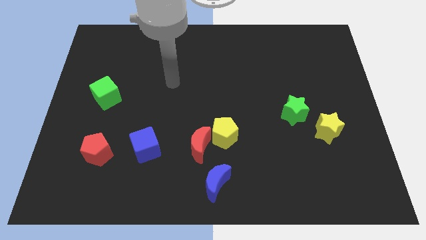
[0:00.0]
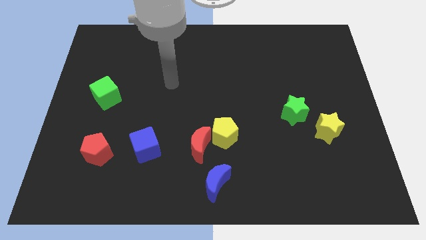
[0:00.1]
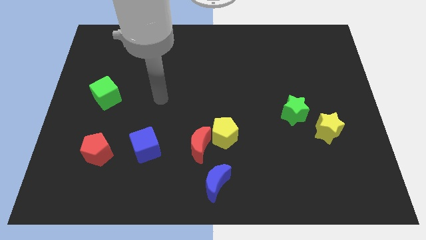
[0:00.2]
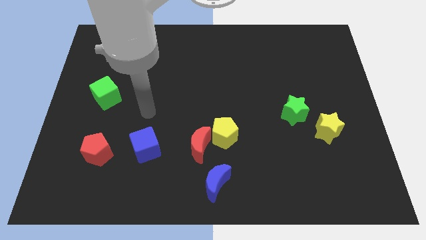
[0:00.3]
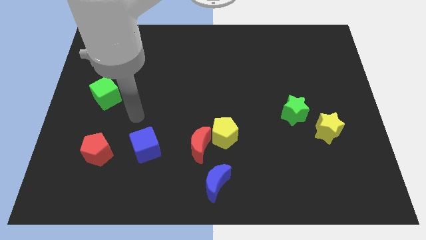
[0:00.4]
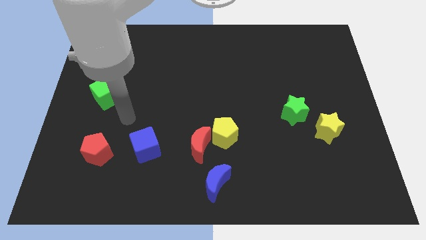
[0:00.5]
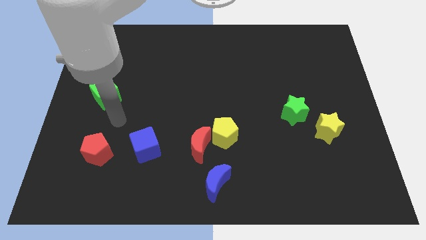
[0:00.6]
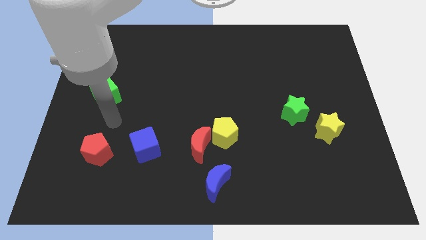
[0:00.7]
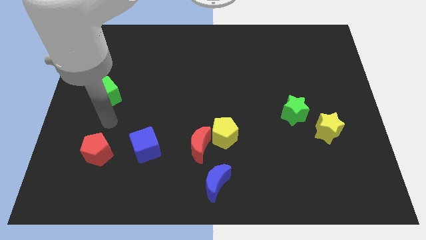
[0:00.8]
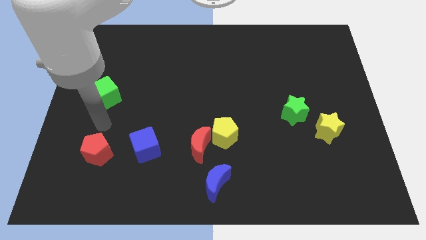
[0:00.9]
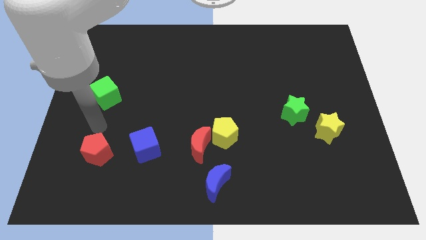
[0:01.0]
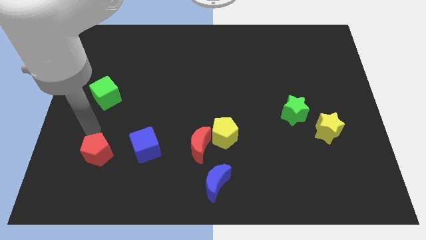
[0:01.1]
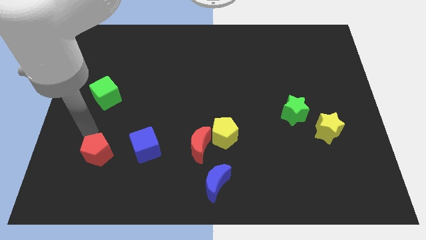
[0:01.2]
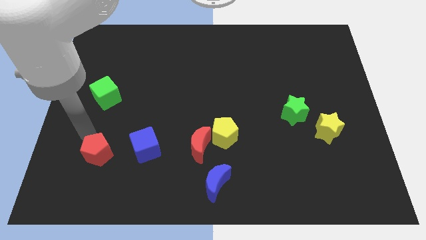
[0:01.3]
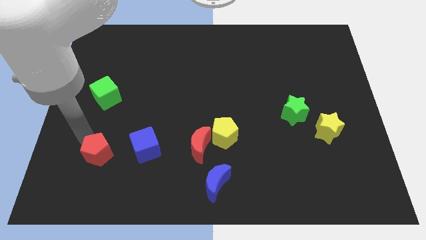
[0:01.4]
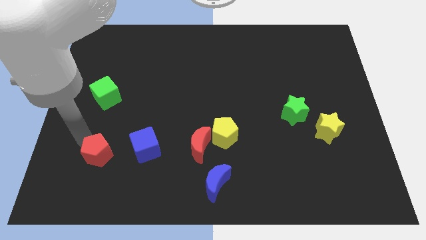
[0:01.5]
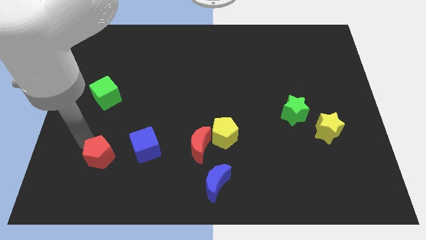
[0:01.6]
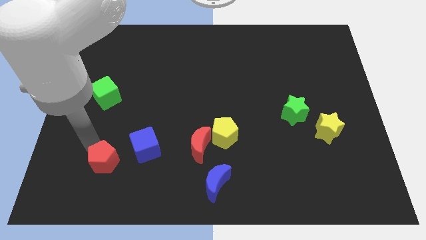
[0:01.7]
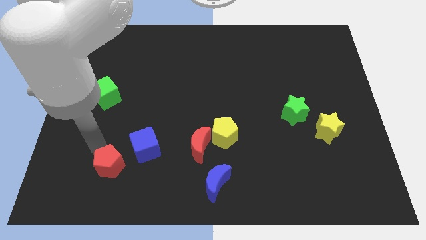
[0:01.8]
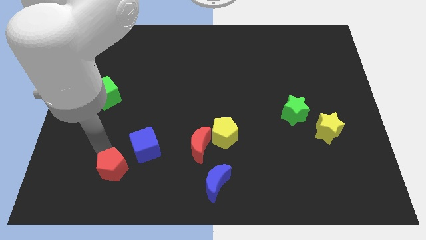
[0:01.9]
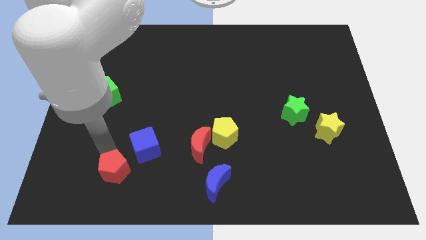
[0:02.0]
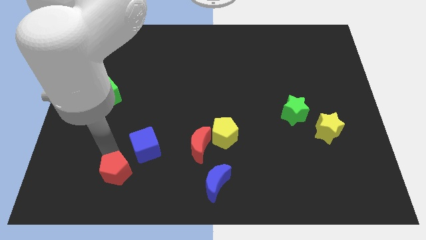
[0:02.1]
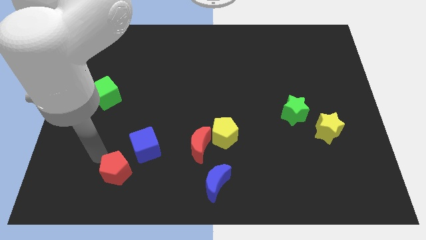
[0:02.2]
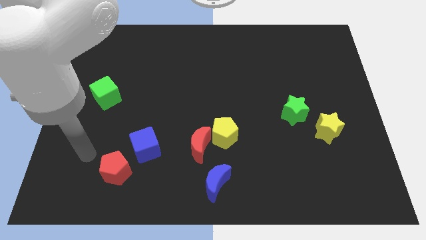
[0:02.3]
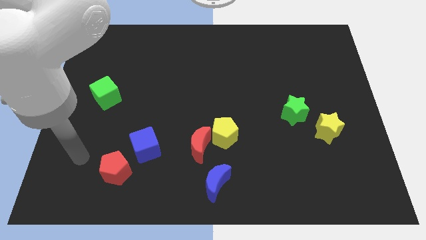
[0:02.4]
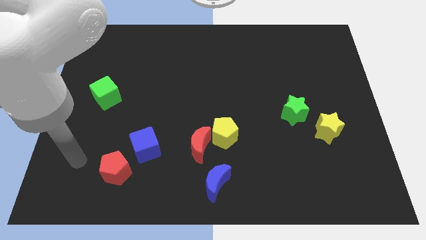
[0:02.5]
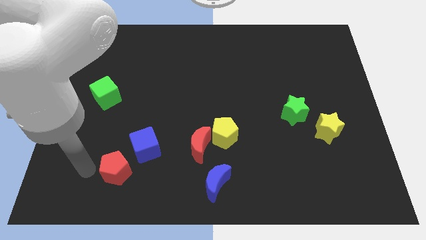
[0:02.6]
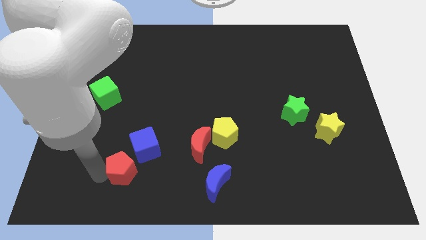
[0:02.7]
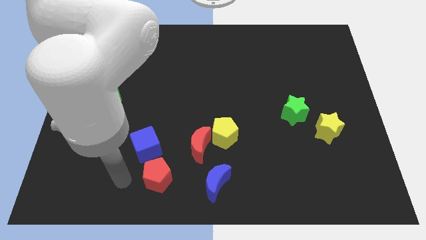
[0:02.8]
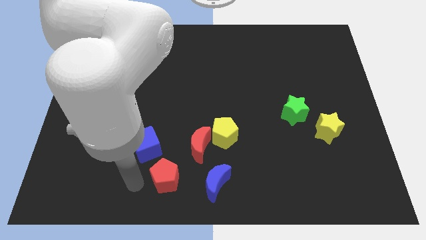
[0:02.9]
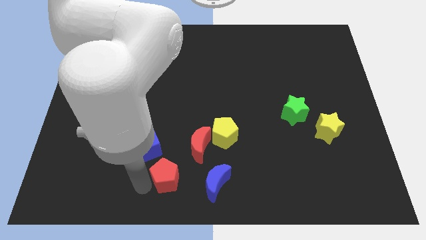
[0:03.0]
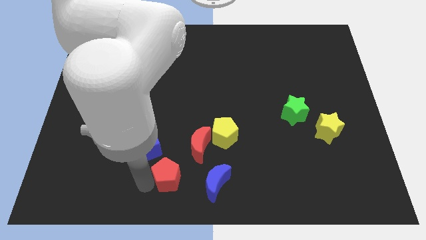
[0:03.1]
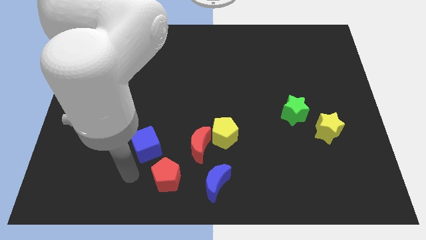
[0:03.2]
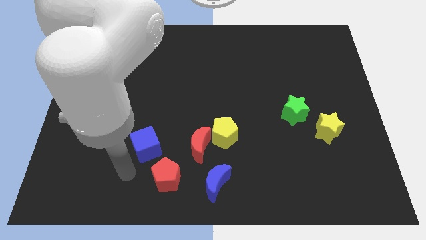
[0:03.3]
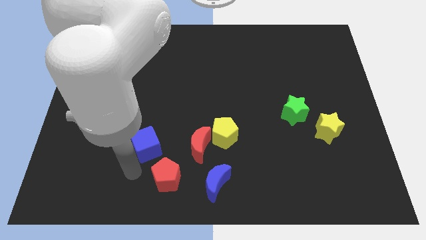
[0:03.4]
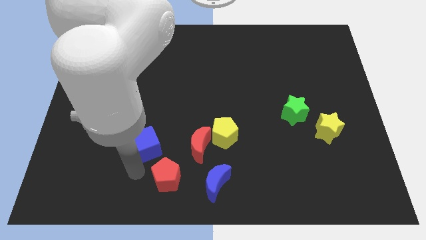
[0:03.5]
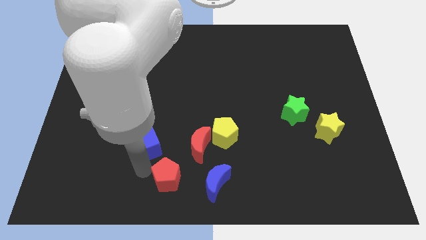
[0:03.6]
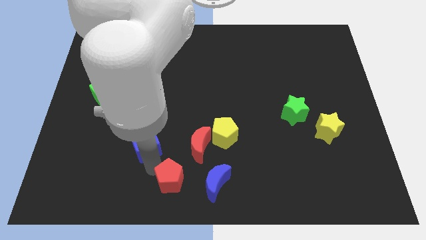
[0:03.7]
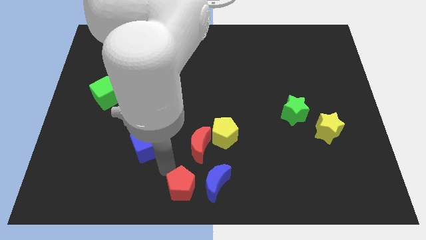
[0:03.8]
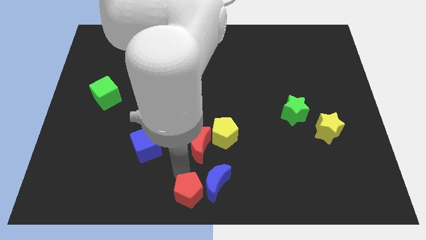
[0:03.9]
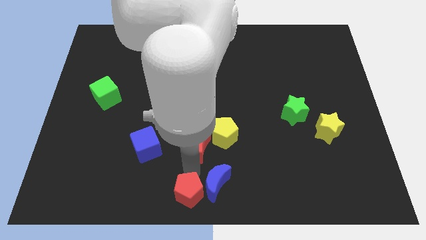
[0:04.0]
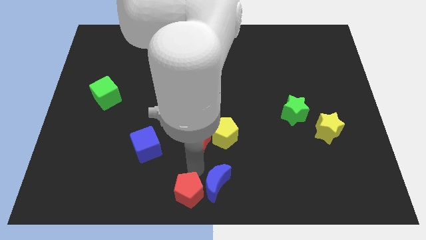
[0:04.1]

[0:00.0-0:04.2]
push the red pentagon close to the blue moon

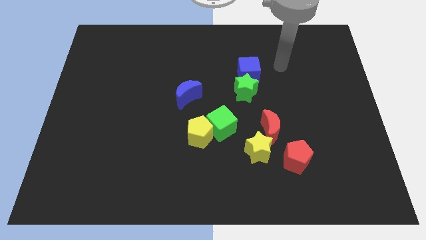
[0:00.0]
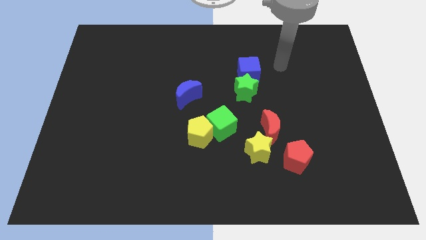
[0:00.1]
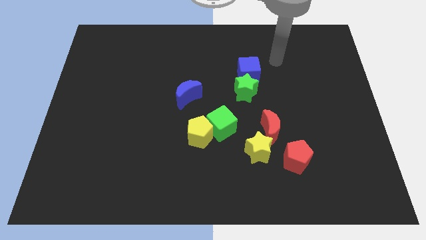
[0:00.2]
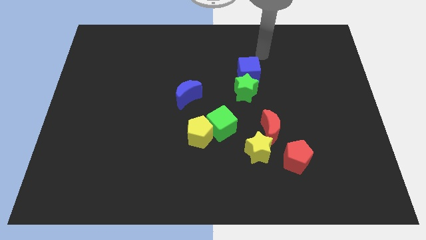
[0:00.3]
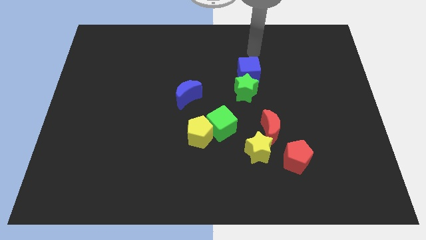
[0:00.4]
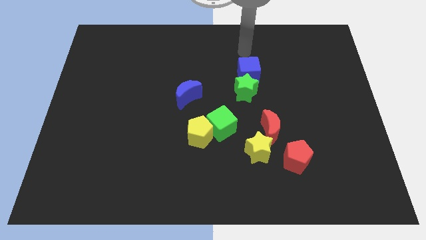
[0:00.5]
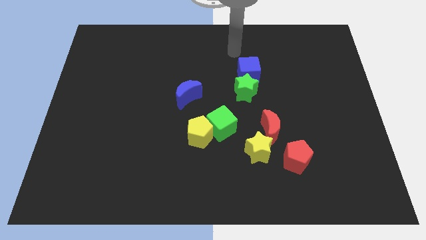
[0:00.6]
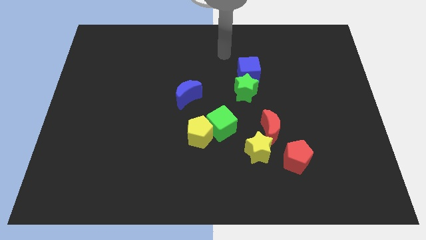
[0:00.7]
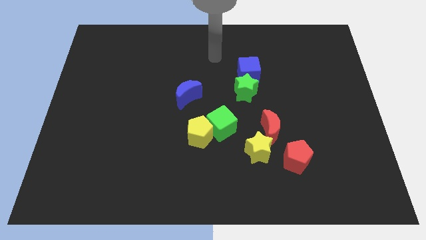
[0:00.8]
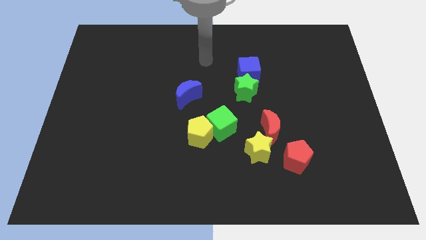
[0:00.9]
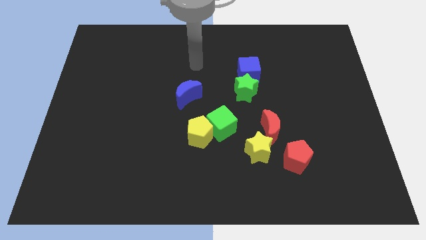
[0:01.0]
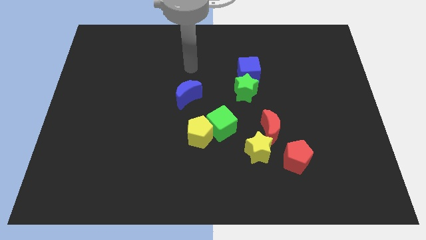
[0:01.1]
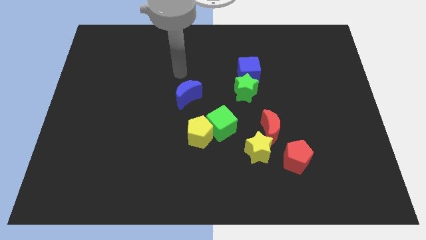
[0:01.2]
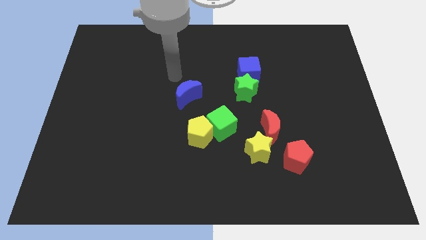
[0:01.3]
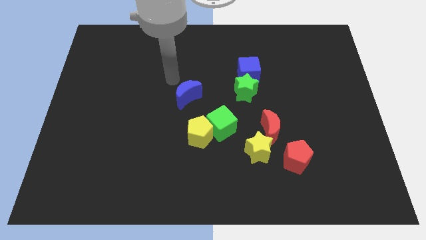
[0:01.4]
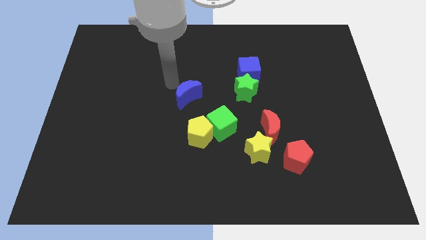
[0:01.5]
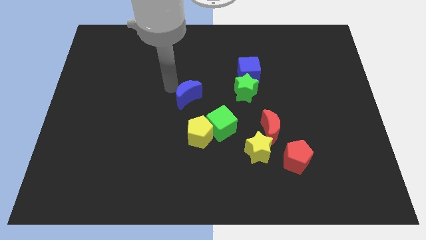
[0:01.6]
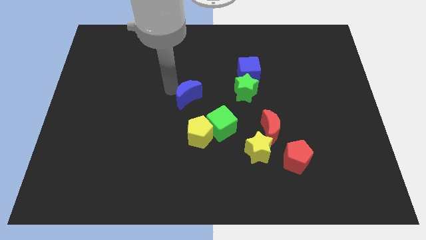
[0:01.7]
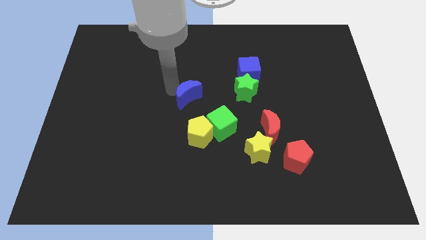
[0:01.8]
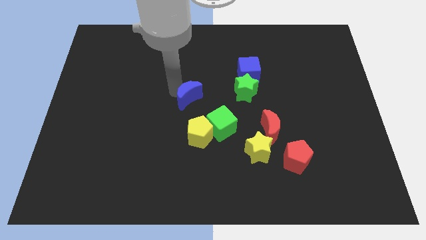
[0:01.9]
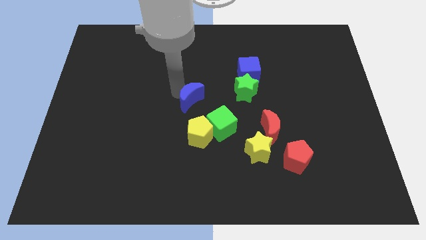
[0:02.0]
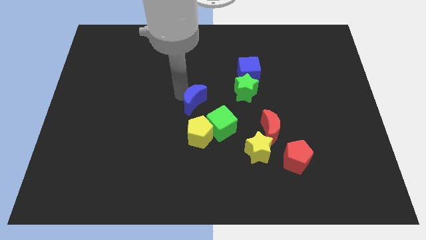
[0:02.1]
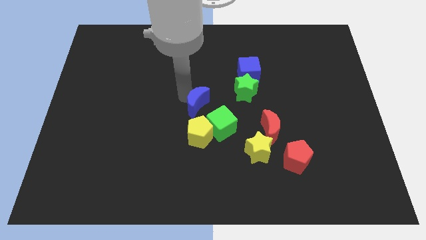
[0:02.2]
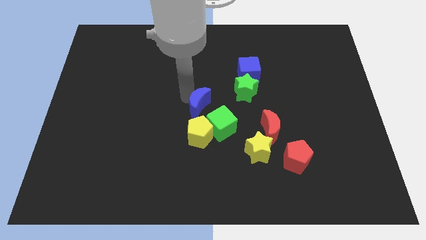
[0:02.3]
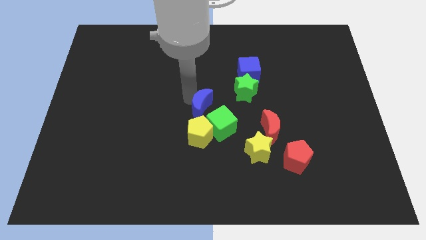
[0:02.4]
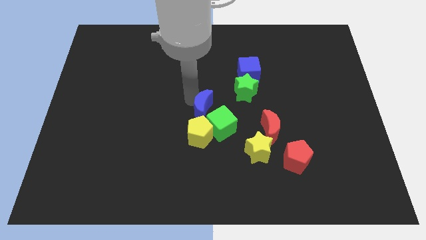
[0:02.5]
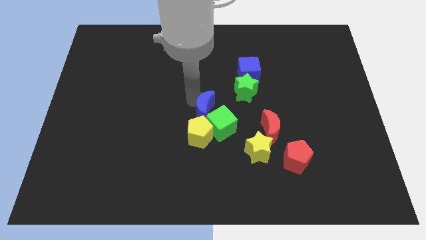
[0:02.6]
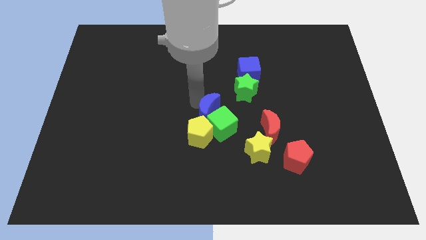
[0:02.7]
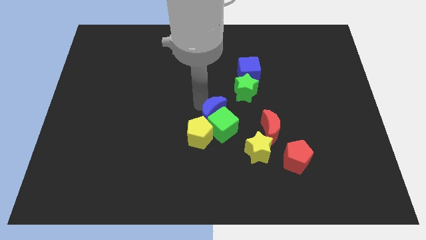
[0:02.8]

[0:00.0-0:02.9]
slide the blue moon close to the green cube

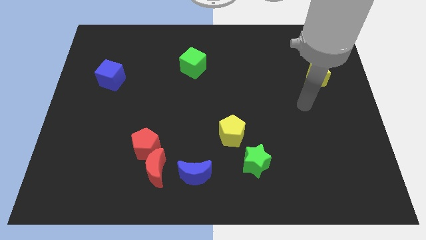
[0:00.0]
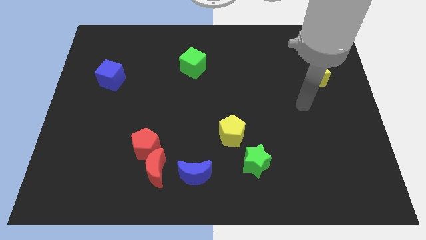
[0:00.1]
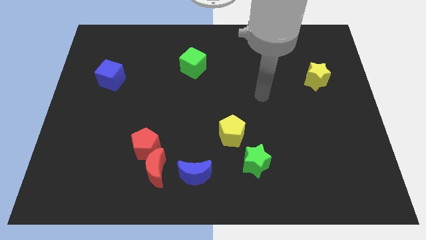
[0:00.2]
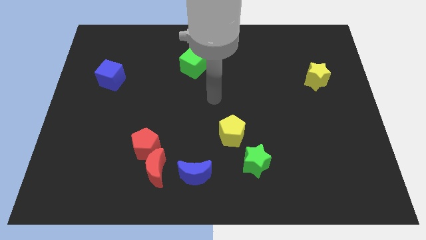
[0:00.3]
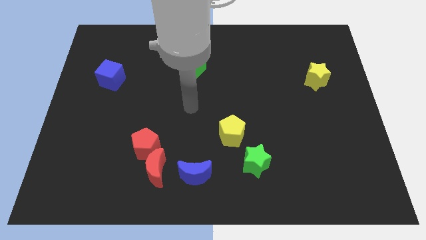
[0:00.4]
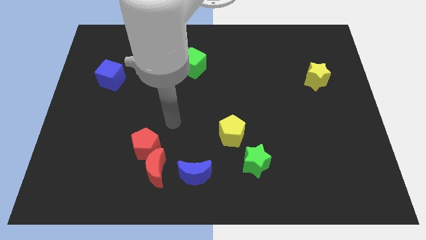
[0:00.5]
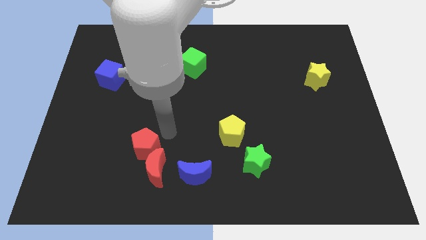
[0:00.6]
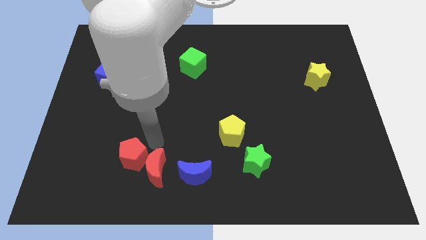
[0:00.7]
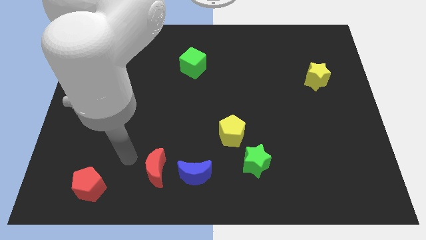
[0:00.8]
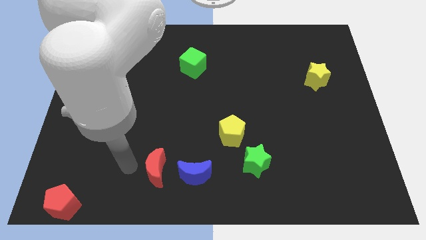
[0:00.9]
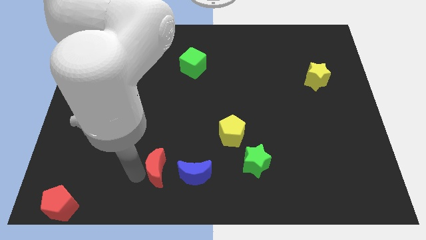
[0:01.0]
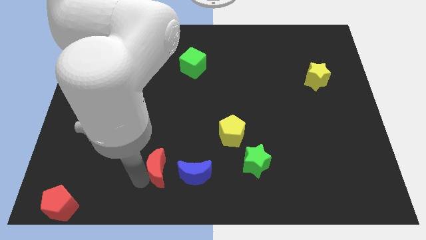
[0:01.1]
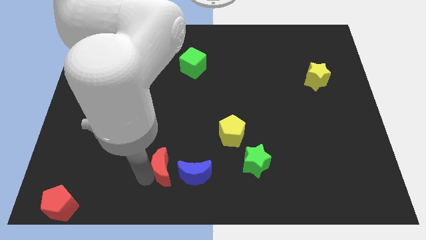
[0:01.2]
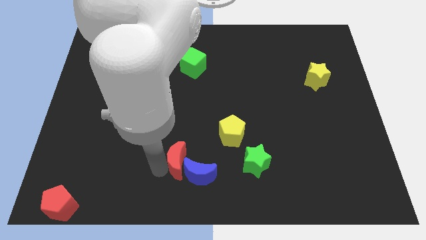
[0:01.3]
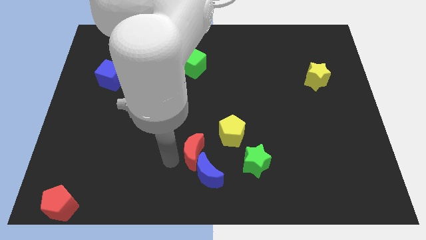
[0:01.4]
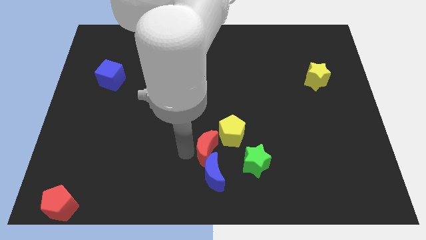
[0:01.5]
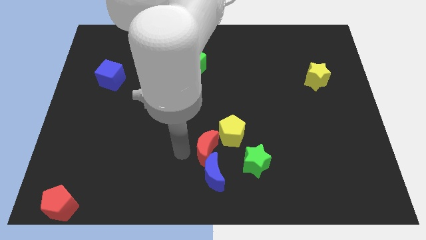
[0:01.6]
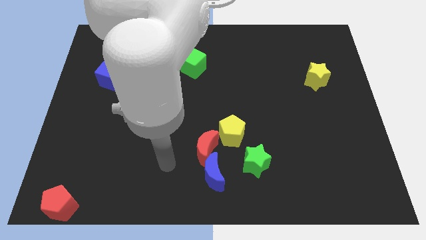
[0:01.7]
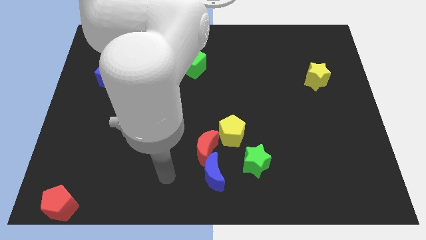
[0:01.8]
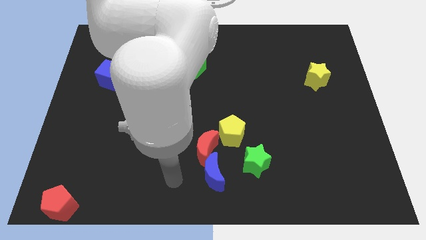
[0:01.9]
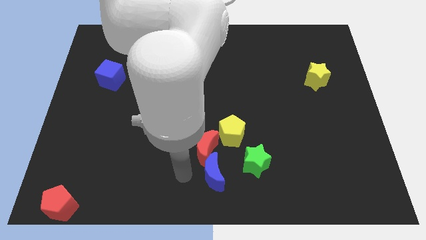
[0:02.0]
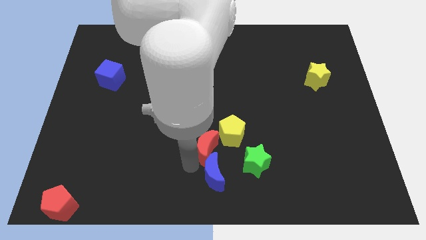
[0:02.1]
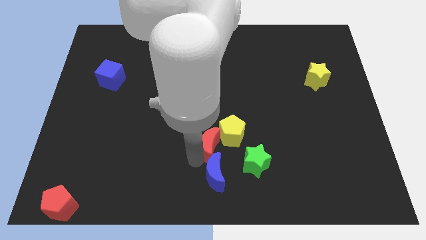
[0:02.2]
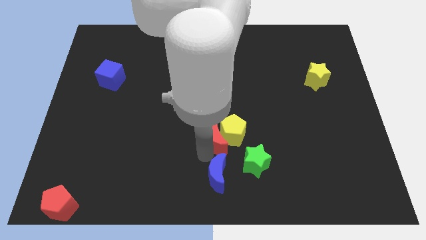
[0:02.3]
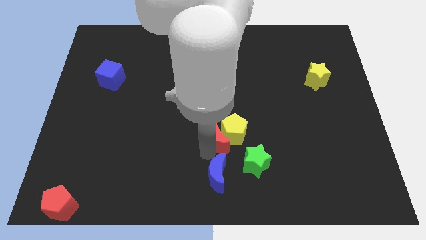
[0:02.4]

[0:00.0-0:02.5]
move the red moon close to the yellow pentagon
